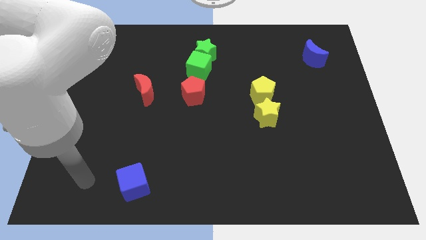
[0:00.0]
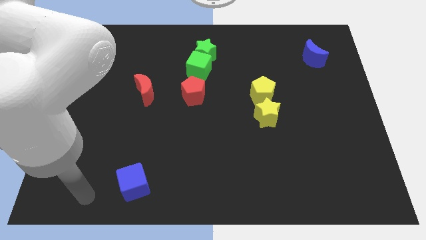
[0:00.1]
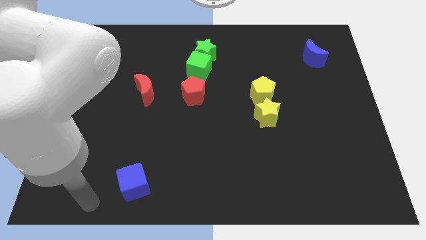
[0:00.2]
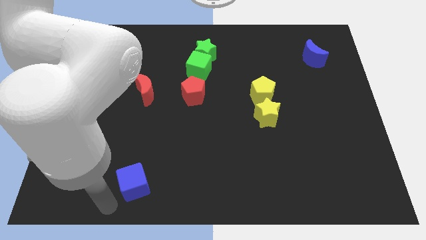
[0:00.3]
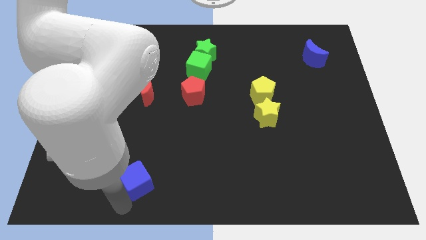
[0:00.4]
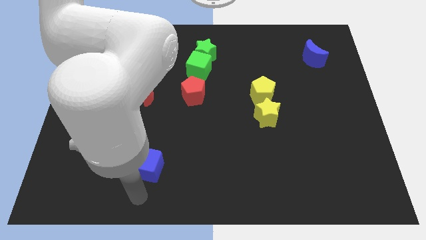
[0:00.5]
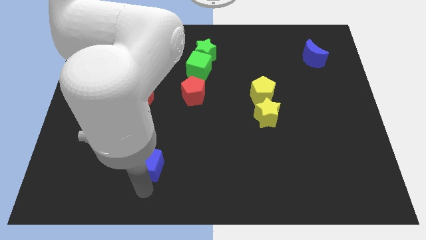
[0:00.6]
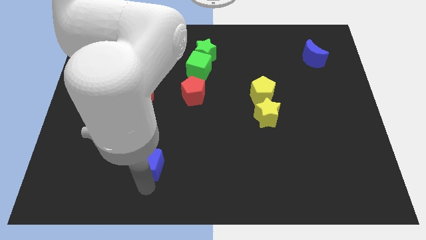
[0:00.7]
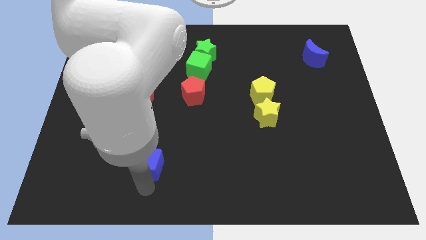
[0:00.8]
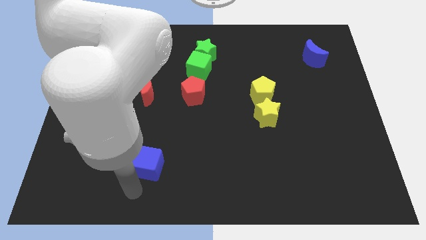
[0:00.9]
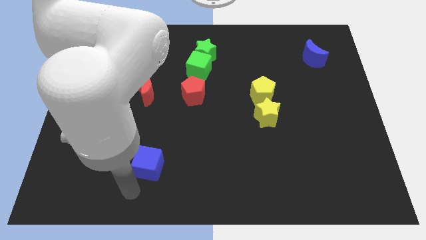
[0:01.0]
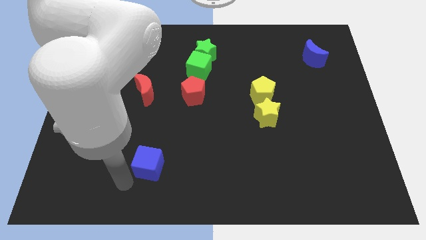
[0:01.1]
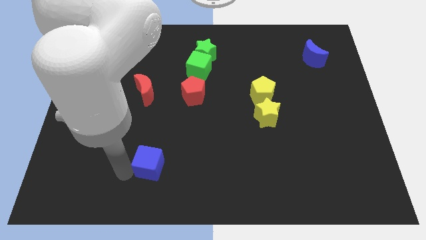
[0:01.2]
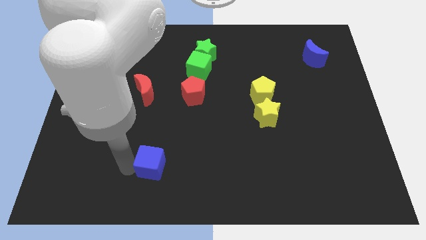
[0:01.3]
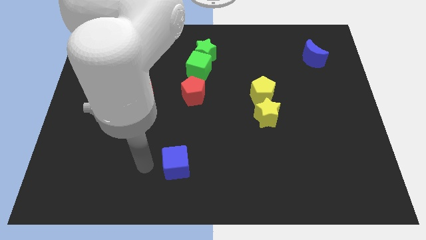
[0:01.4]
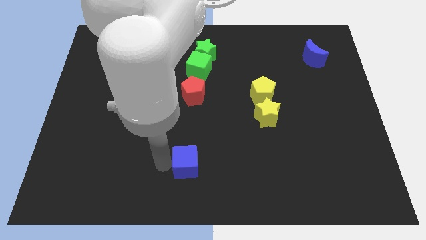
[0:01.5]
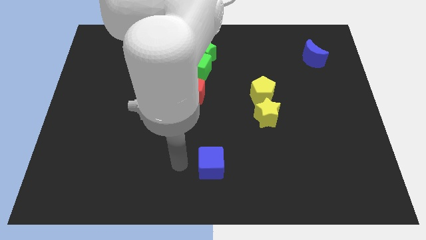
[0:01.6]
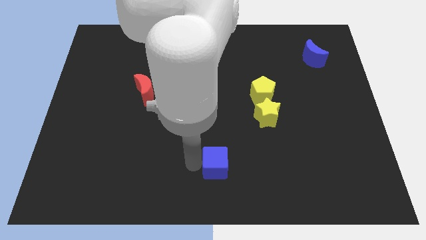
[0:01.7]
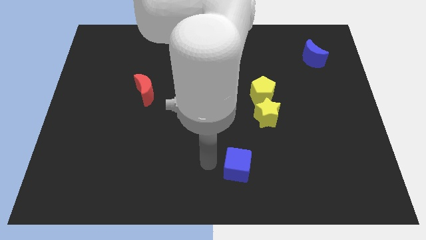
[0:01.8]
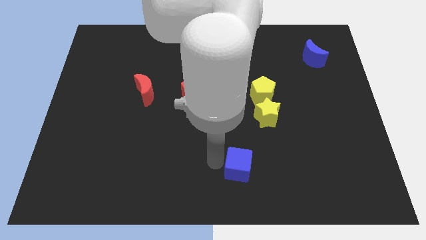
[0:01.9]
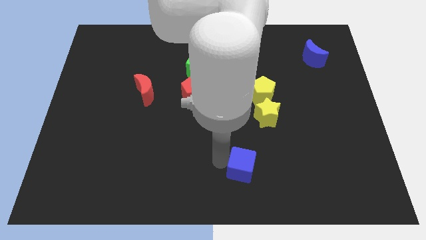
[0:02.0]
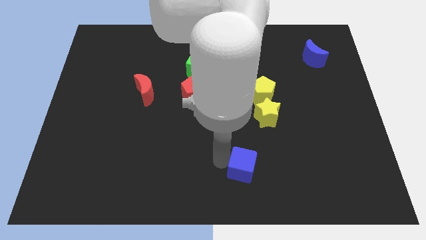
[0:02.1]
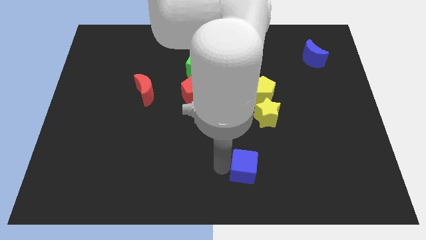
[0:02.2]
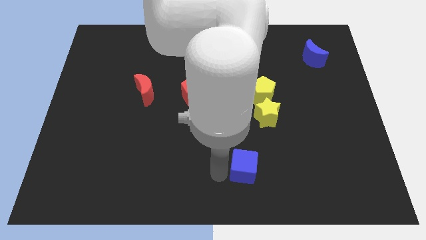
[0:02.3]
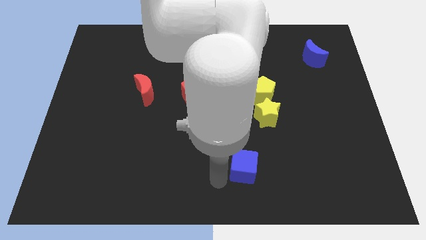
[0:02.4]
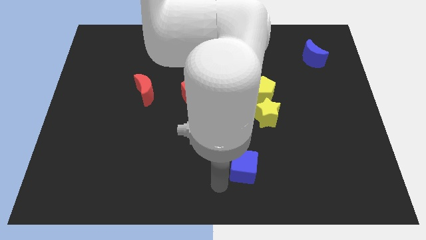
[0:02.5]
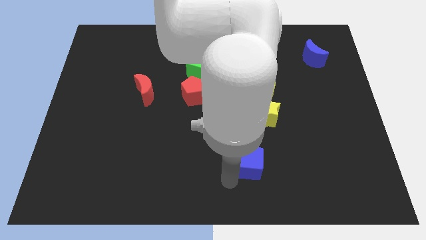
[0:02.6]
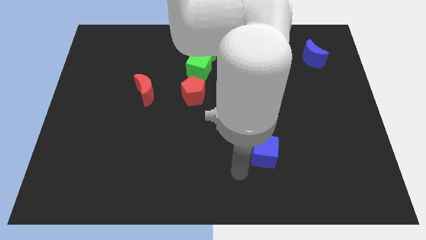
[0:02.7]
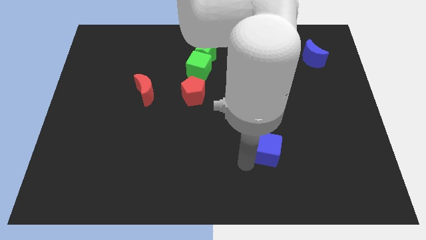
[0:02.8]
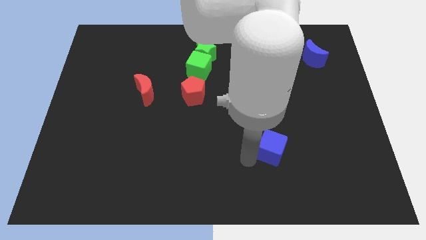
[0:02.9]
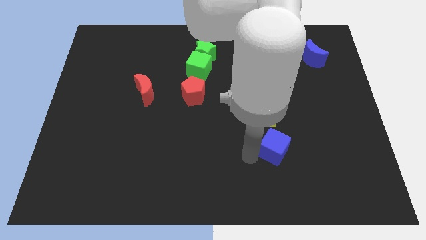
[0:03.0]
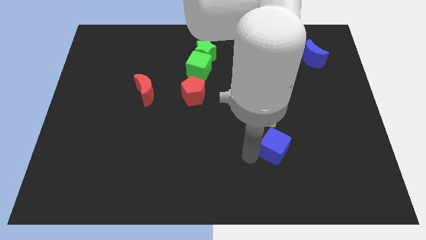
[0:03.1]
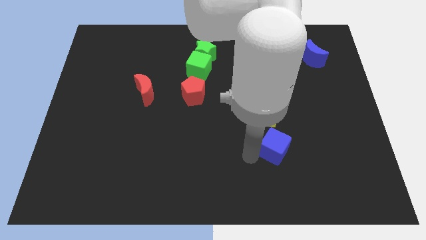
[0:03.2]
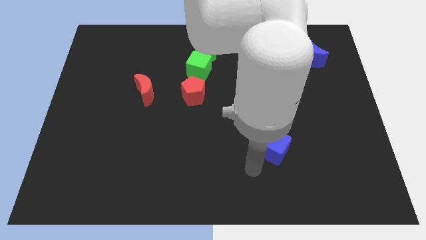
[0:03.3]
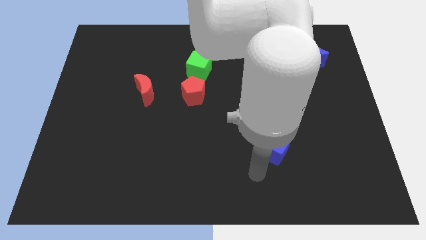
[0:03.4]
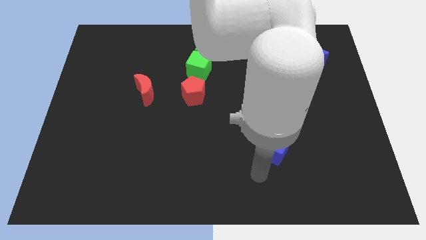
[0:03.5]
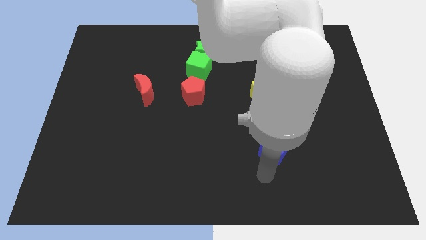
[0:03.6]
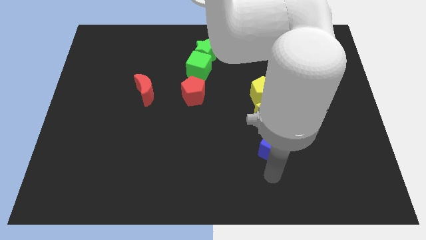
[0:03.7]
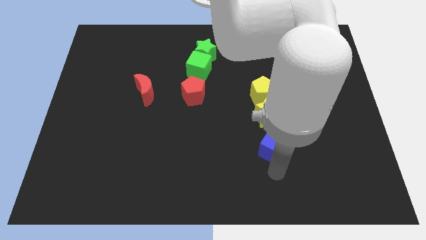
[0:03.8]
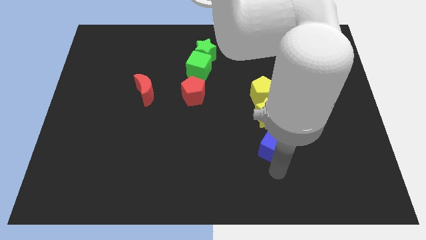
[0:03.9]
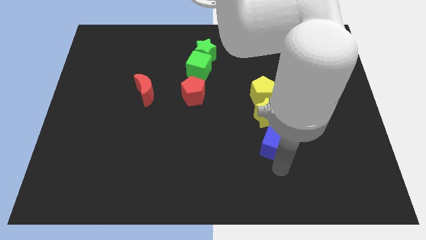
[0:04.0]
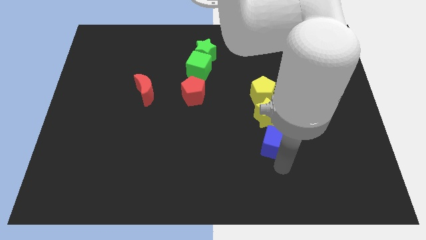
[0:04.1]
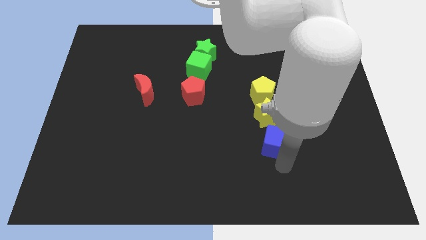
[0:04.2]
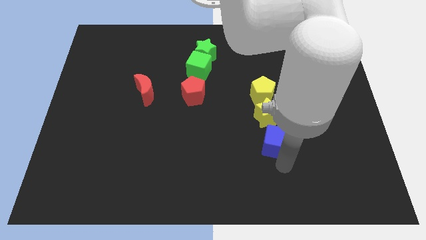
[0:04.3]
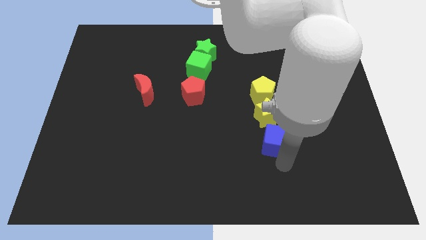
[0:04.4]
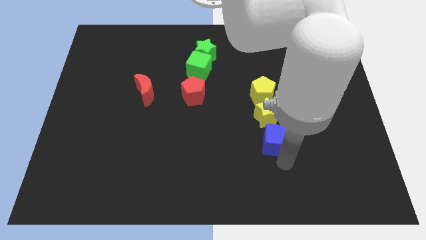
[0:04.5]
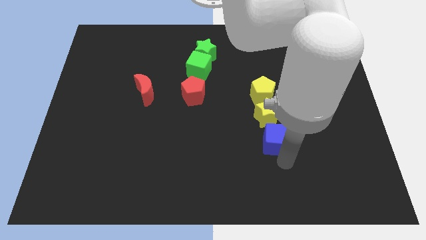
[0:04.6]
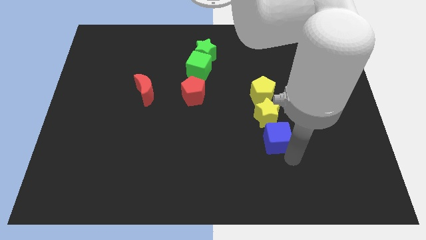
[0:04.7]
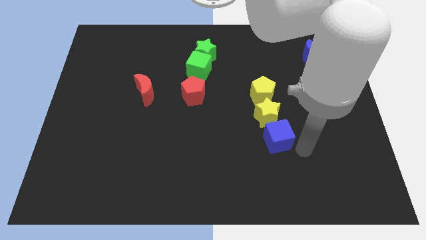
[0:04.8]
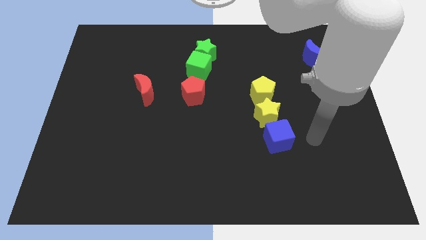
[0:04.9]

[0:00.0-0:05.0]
move the blue cube to the bottom of the yellow star

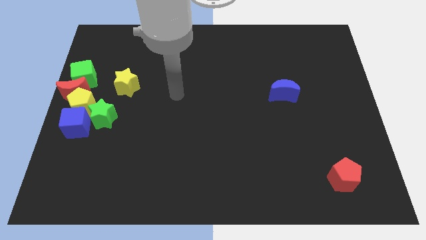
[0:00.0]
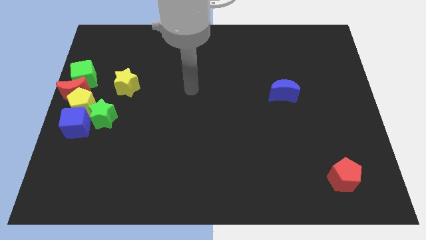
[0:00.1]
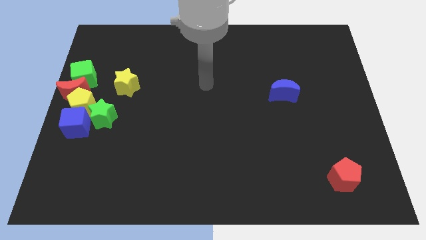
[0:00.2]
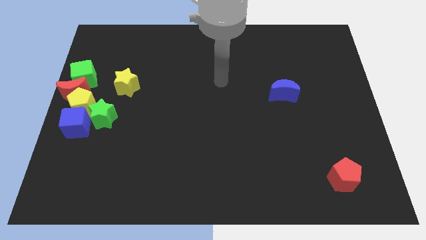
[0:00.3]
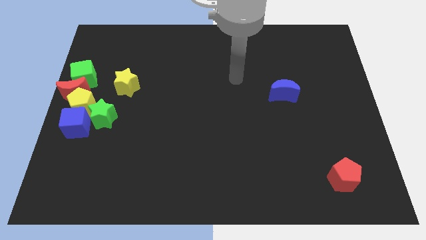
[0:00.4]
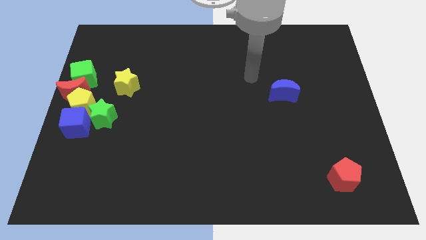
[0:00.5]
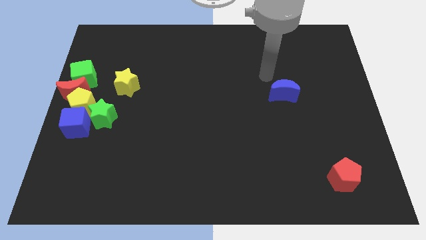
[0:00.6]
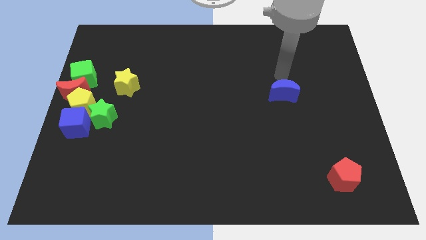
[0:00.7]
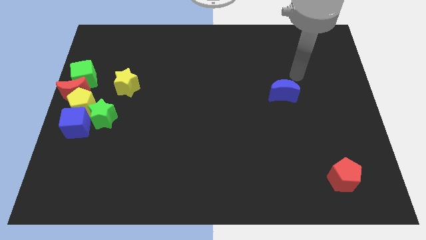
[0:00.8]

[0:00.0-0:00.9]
place your arm above blue moon

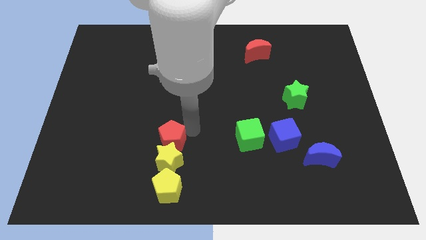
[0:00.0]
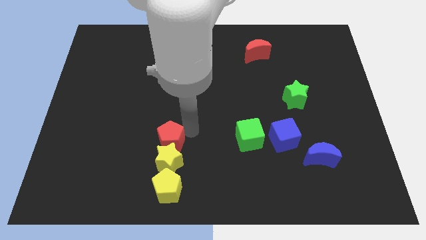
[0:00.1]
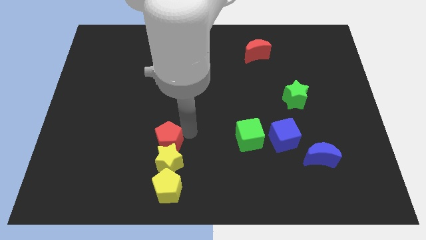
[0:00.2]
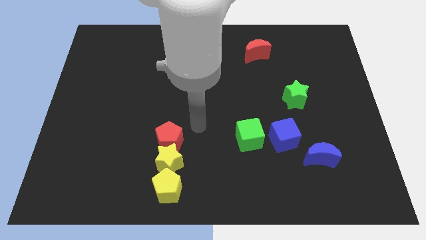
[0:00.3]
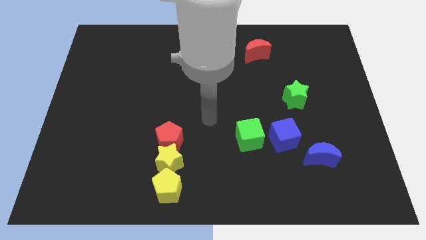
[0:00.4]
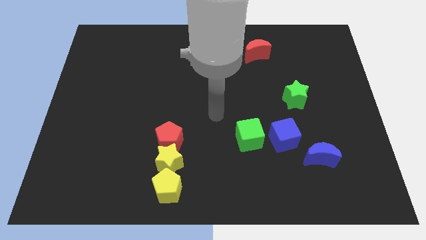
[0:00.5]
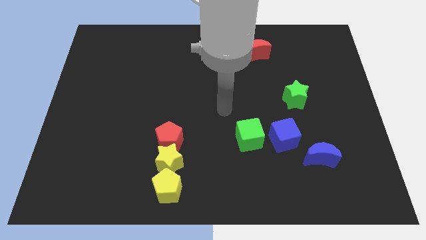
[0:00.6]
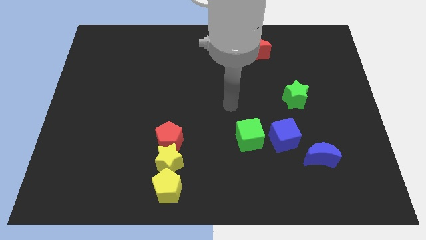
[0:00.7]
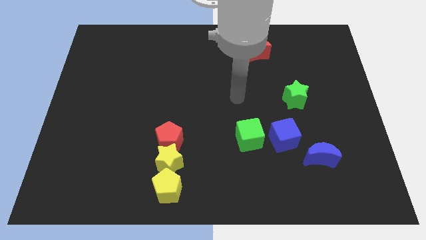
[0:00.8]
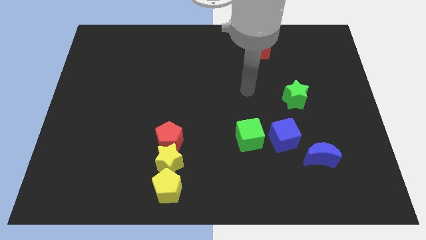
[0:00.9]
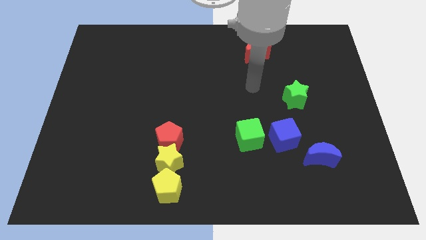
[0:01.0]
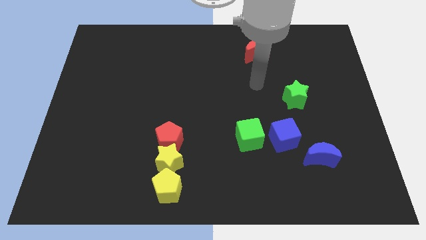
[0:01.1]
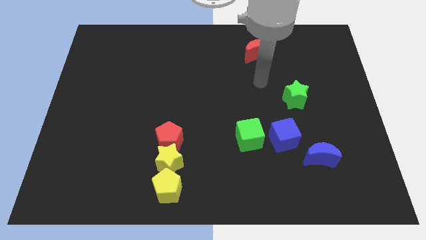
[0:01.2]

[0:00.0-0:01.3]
move the arm away from the red pentagon

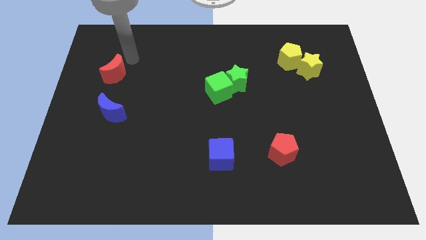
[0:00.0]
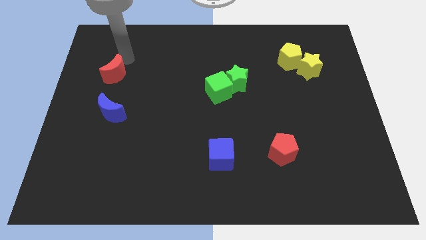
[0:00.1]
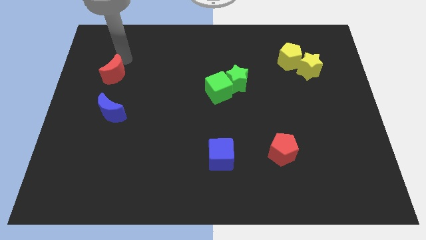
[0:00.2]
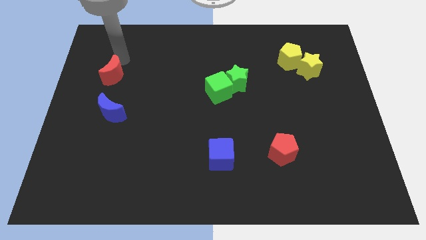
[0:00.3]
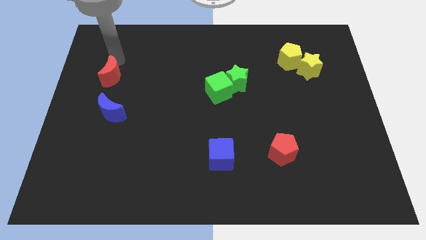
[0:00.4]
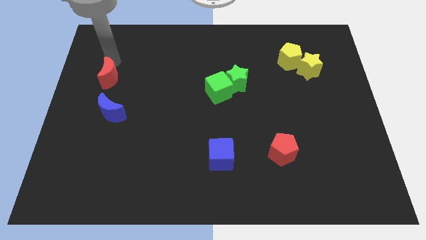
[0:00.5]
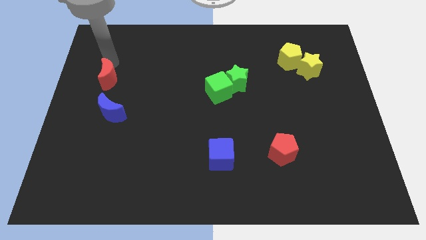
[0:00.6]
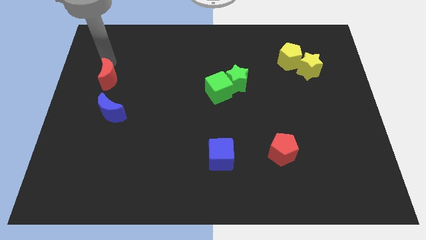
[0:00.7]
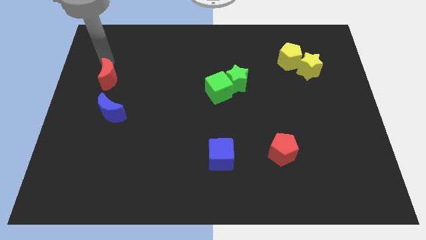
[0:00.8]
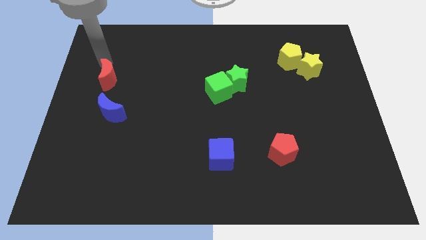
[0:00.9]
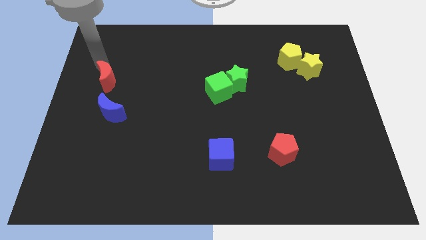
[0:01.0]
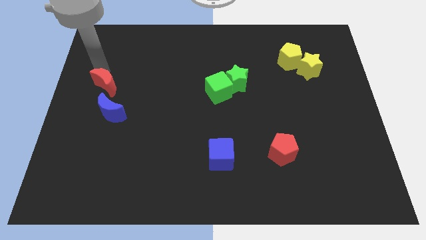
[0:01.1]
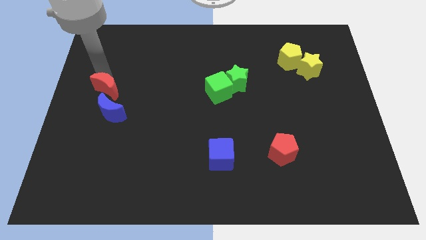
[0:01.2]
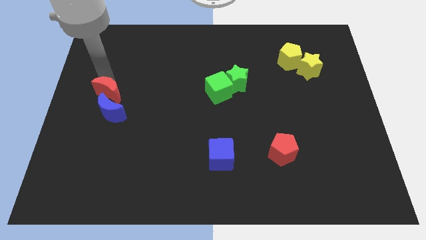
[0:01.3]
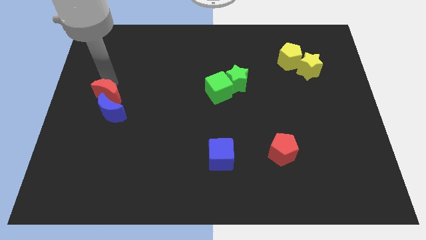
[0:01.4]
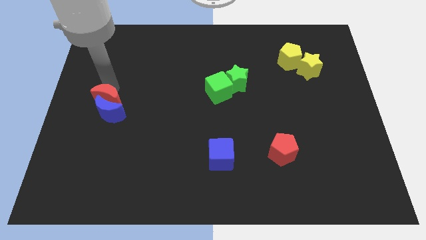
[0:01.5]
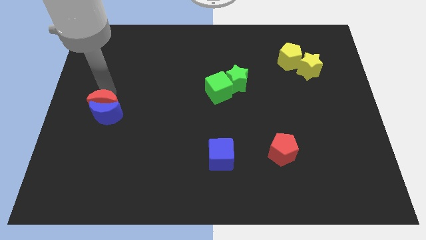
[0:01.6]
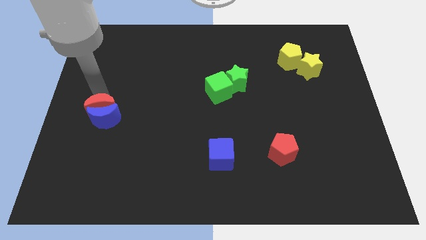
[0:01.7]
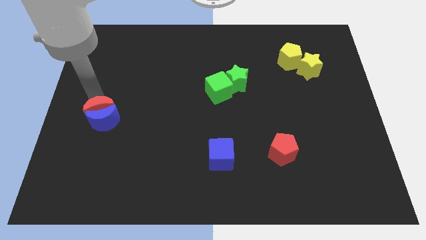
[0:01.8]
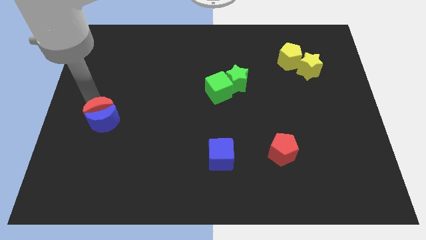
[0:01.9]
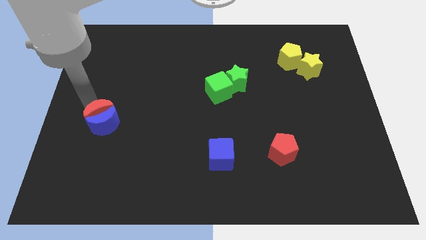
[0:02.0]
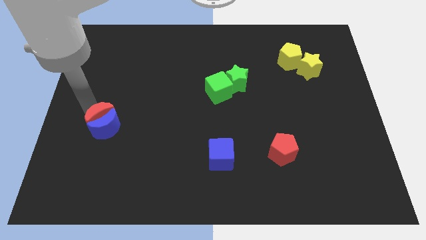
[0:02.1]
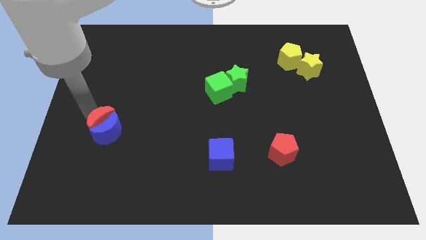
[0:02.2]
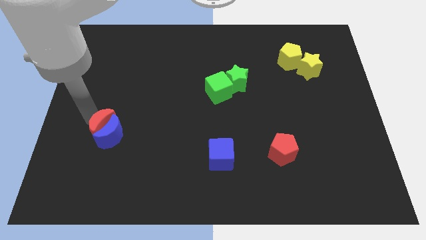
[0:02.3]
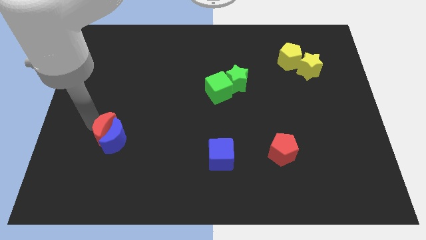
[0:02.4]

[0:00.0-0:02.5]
push the red moon into the blue moon
